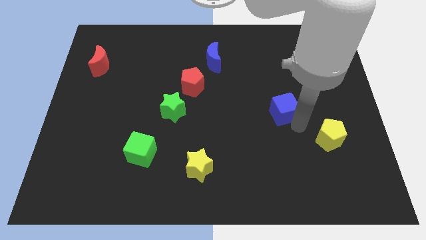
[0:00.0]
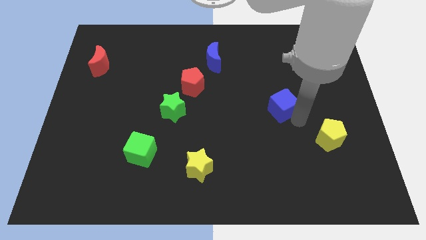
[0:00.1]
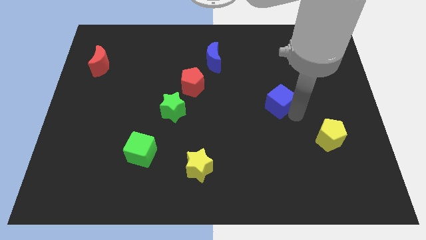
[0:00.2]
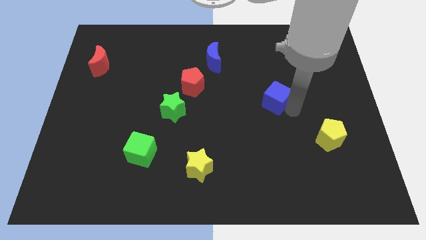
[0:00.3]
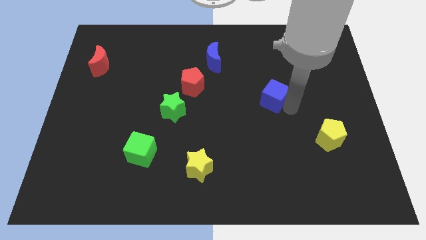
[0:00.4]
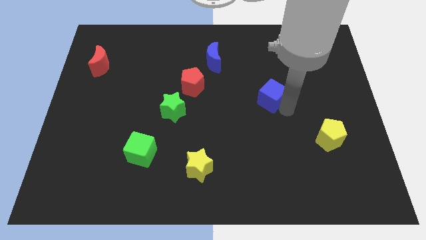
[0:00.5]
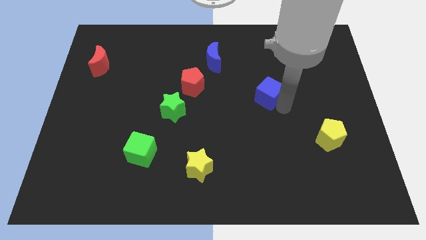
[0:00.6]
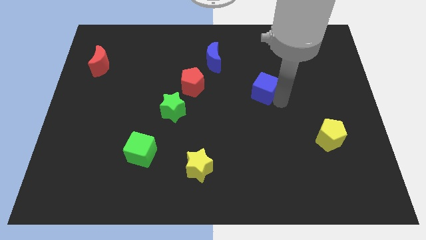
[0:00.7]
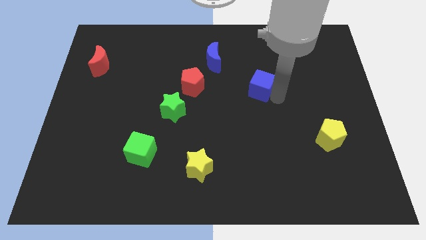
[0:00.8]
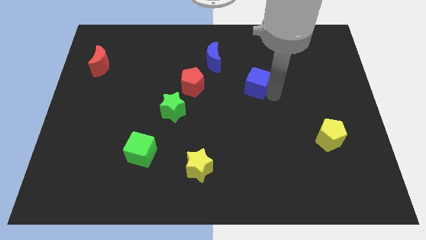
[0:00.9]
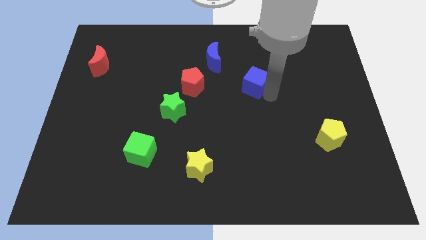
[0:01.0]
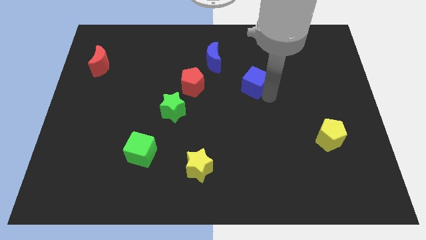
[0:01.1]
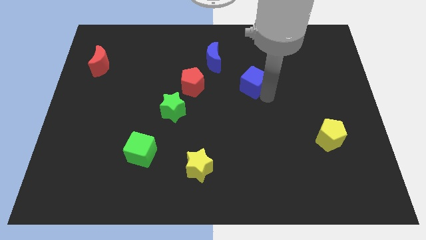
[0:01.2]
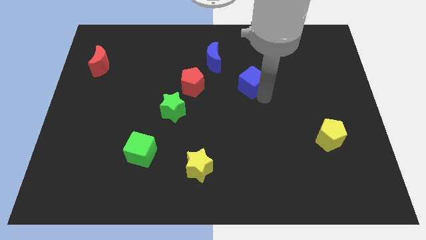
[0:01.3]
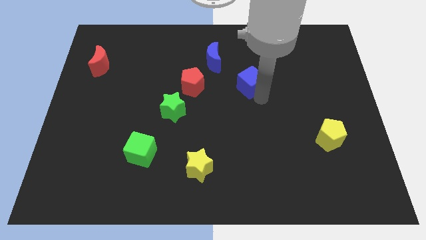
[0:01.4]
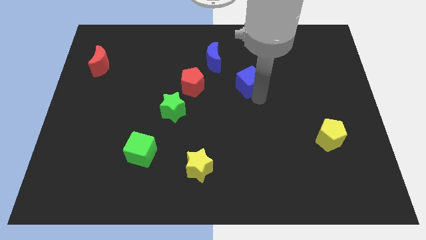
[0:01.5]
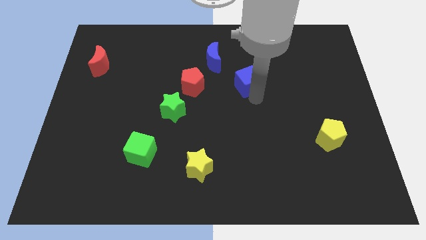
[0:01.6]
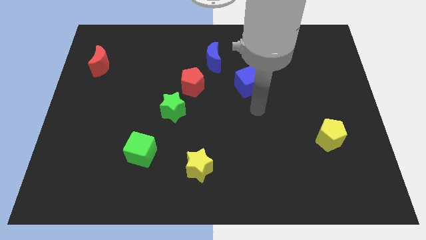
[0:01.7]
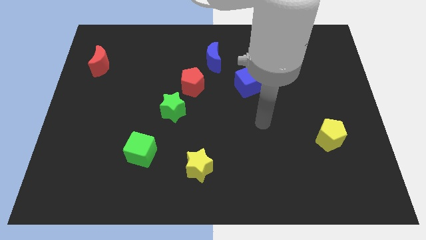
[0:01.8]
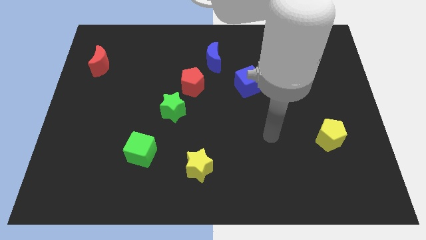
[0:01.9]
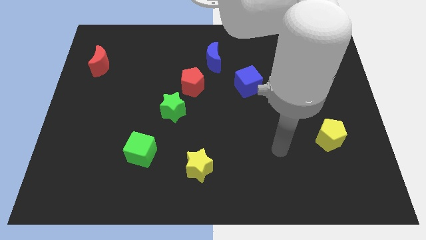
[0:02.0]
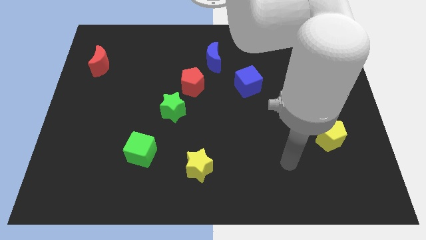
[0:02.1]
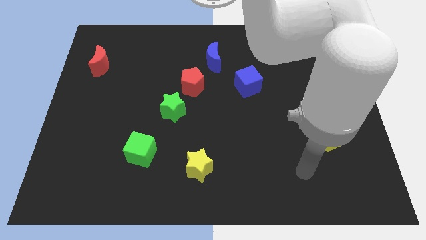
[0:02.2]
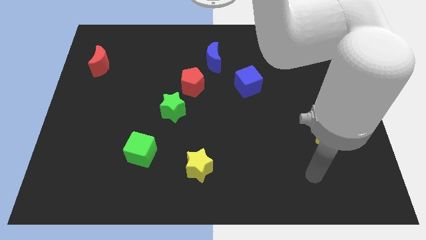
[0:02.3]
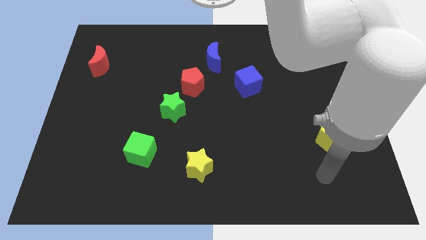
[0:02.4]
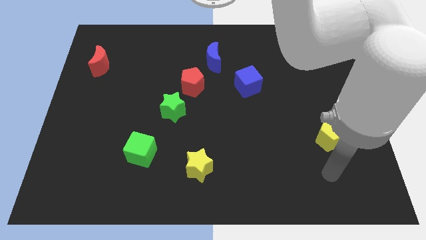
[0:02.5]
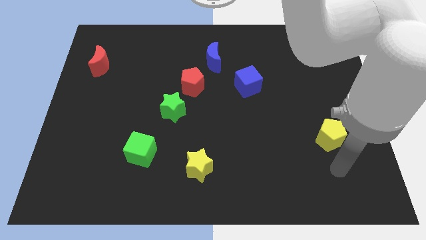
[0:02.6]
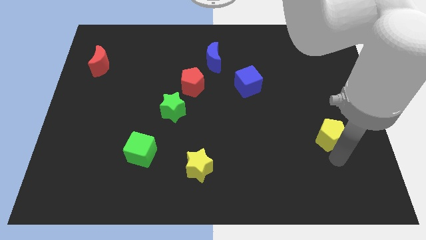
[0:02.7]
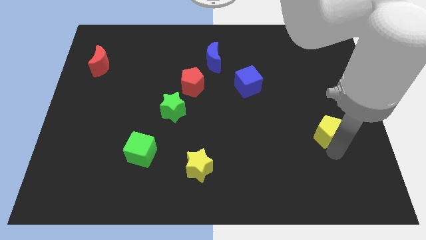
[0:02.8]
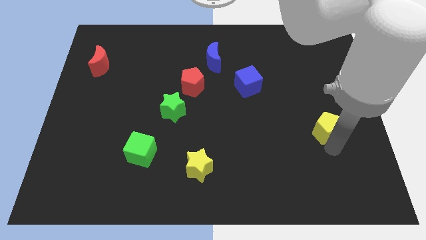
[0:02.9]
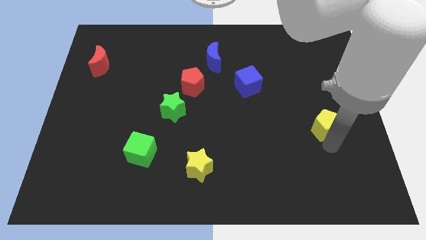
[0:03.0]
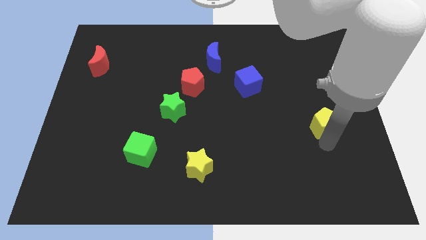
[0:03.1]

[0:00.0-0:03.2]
push the blue cube slightly to the top left

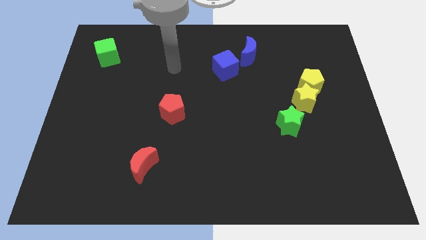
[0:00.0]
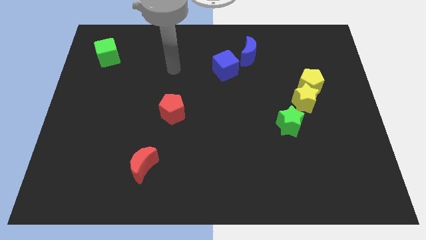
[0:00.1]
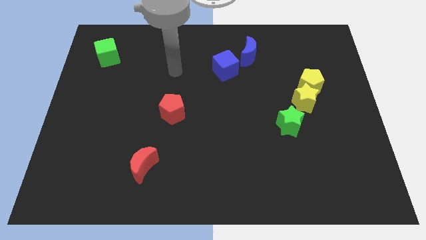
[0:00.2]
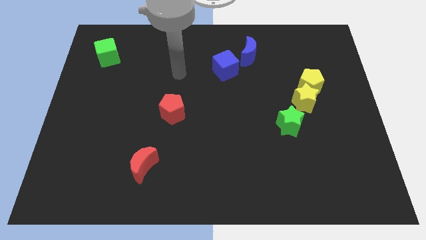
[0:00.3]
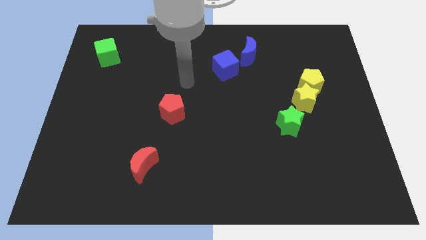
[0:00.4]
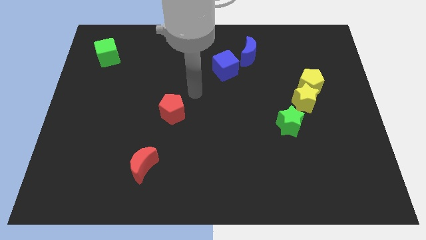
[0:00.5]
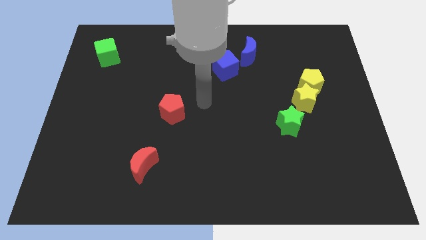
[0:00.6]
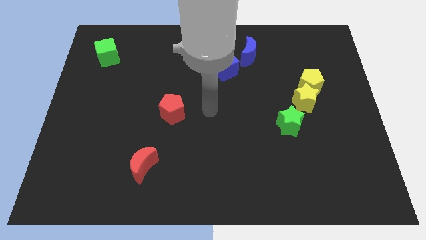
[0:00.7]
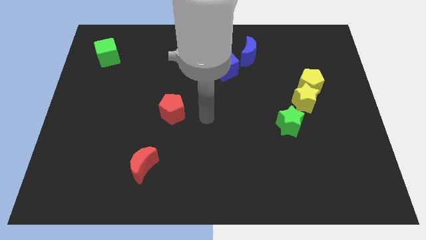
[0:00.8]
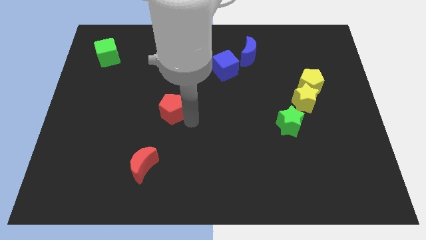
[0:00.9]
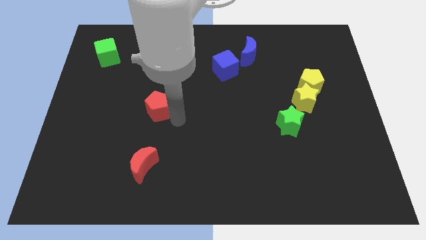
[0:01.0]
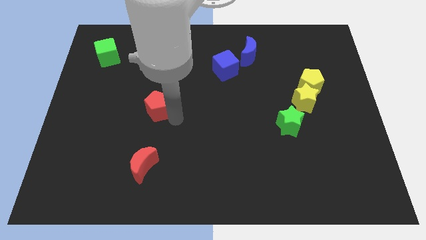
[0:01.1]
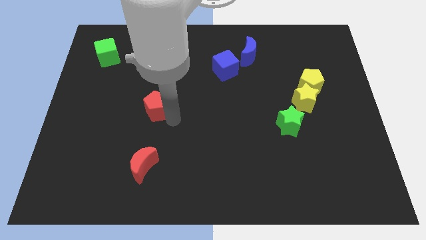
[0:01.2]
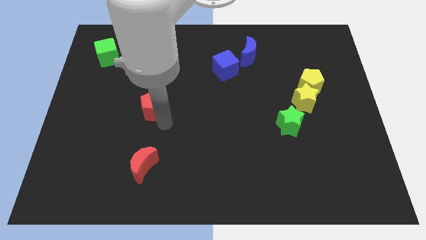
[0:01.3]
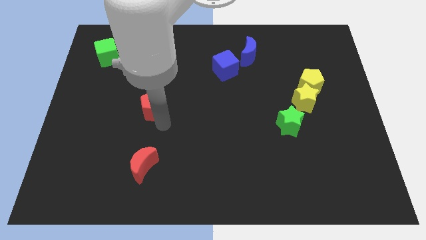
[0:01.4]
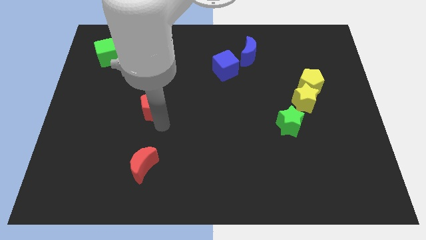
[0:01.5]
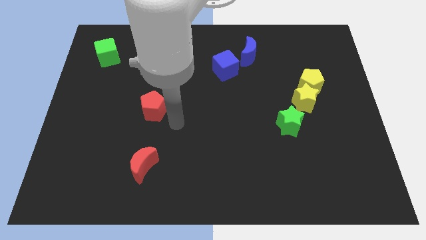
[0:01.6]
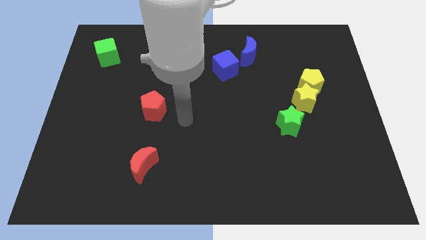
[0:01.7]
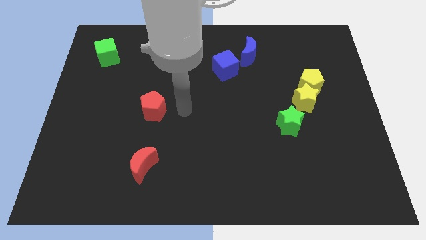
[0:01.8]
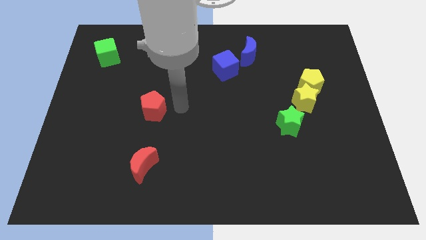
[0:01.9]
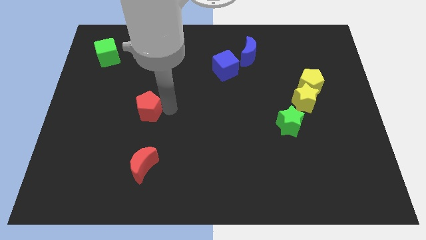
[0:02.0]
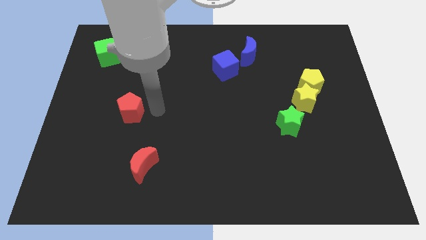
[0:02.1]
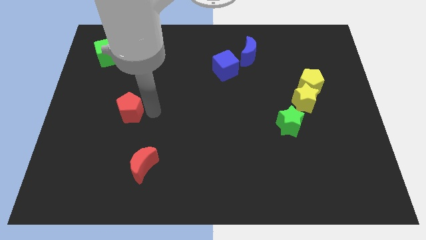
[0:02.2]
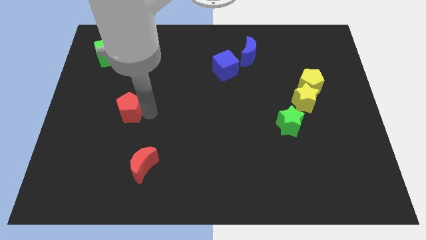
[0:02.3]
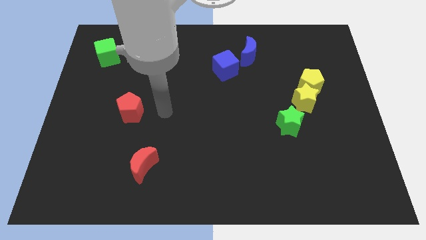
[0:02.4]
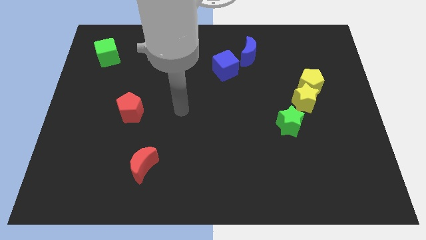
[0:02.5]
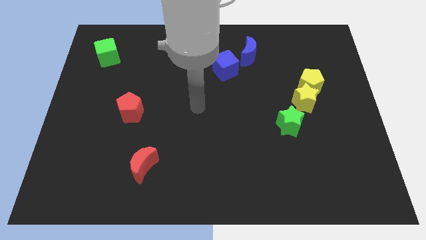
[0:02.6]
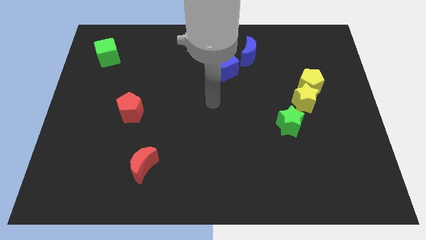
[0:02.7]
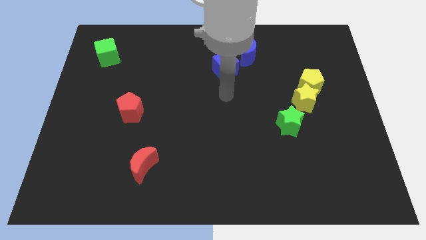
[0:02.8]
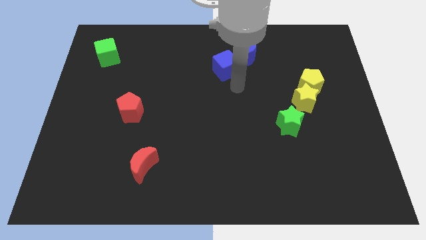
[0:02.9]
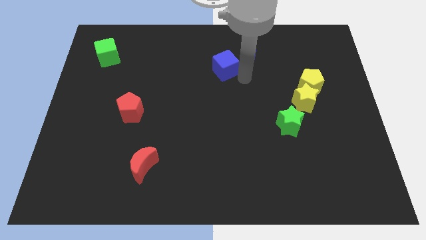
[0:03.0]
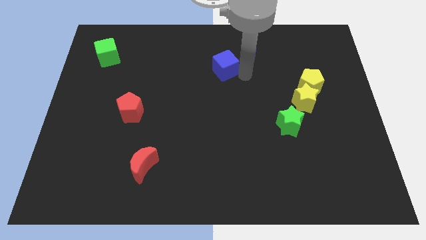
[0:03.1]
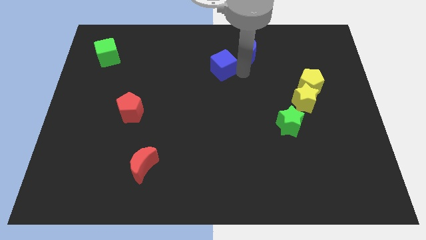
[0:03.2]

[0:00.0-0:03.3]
place the red pentagon between the green cube and the red crescent

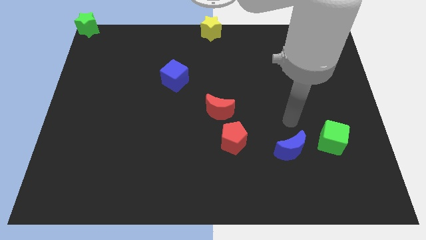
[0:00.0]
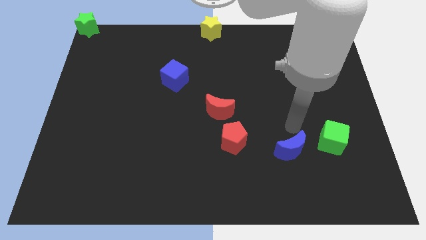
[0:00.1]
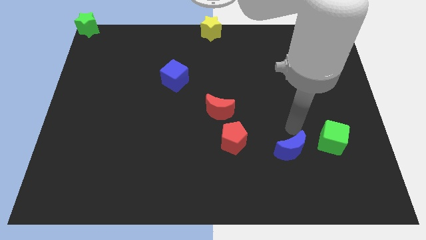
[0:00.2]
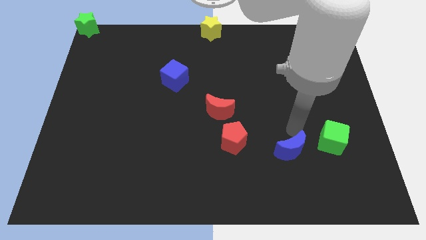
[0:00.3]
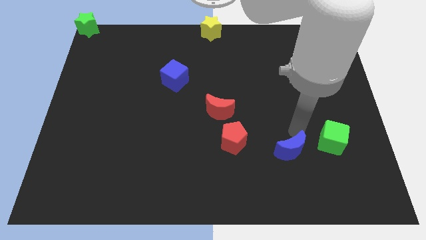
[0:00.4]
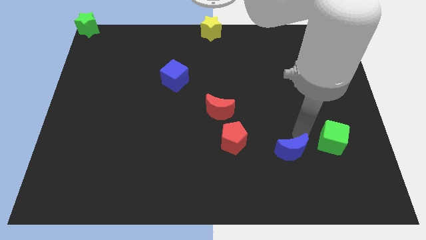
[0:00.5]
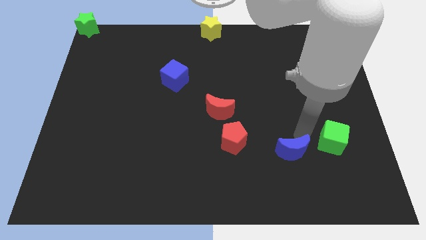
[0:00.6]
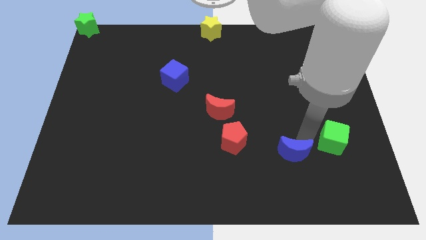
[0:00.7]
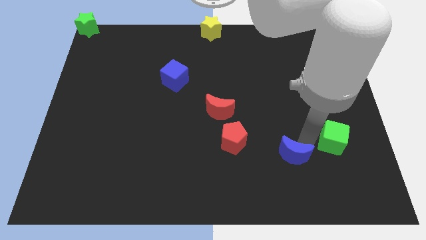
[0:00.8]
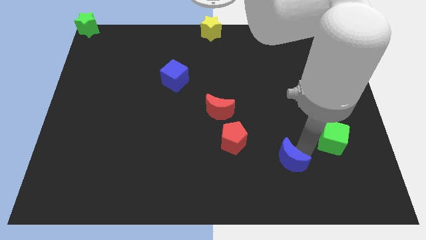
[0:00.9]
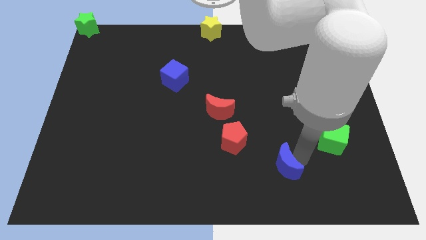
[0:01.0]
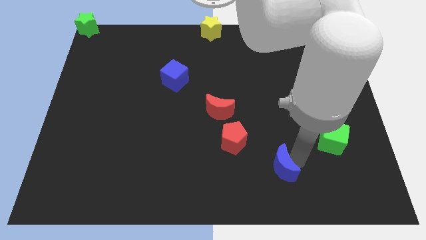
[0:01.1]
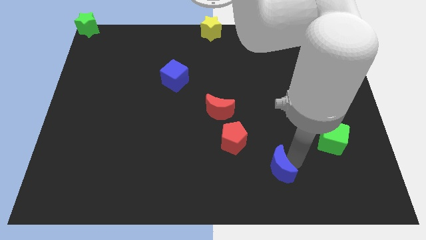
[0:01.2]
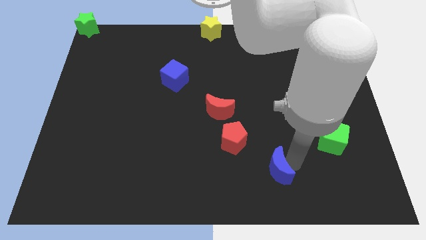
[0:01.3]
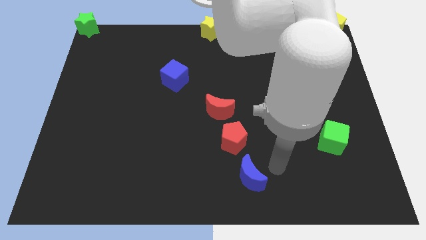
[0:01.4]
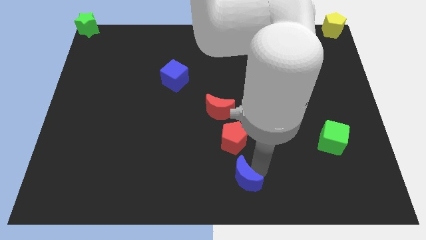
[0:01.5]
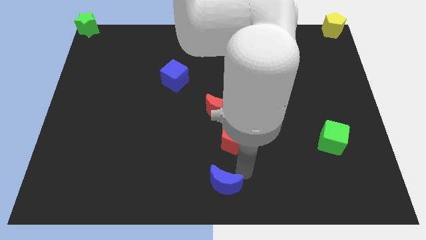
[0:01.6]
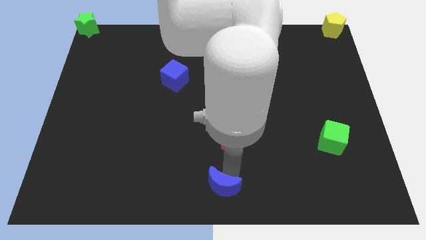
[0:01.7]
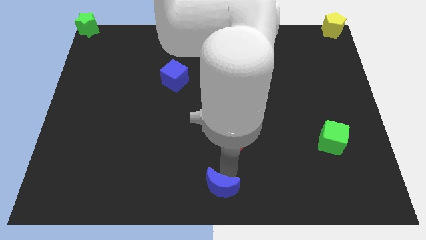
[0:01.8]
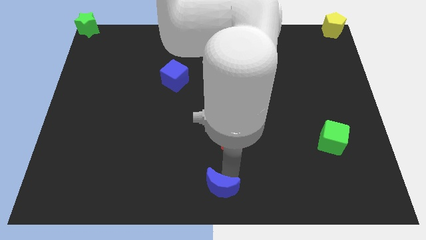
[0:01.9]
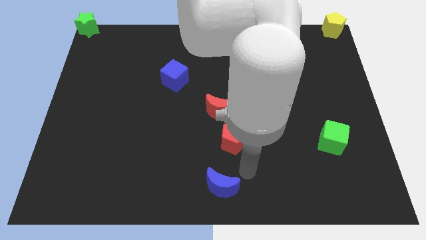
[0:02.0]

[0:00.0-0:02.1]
place the blue crescent towards the bottom center

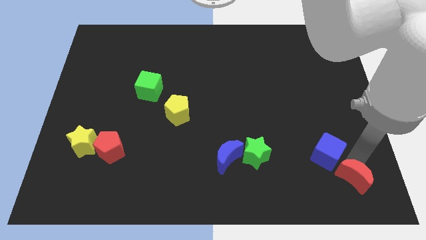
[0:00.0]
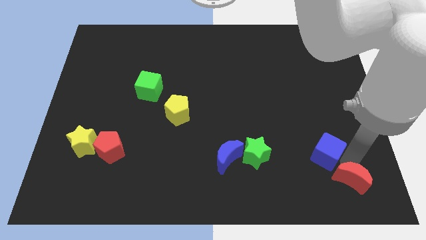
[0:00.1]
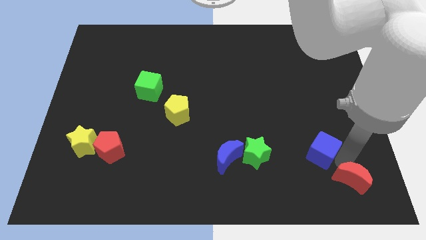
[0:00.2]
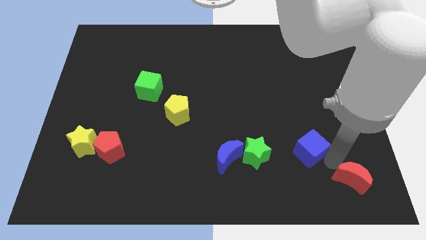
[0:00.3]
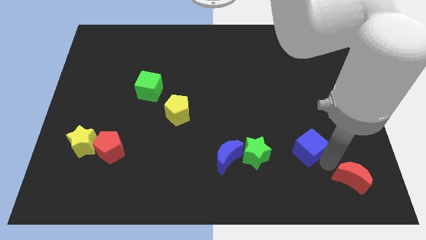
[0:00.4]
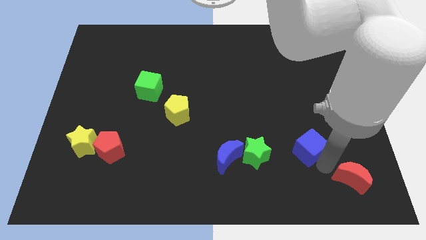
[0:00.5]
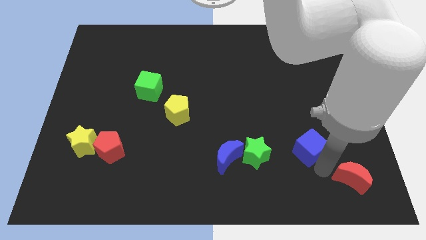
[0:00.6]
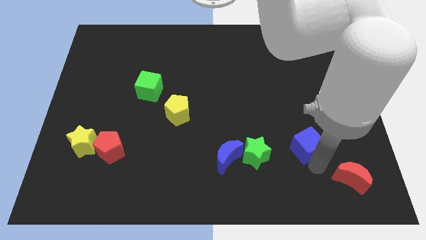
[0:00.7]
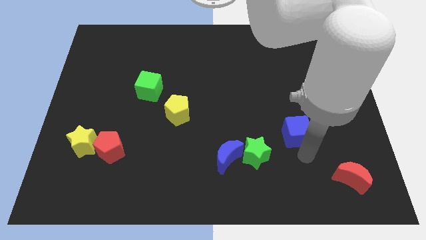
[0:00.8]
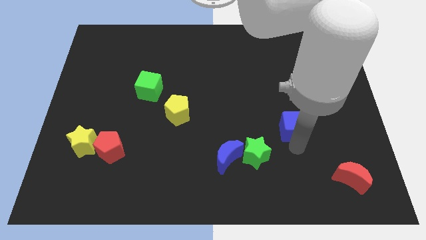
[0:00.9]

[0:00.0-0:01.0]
separate blue cube from red crescent
